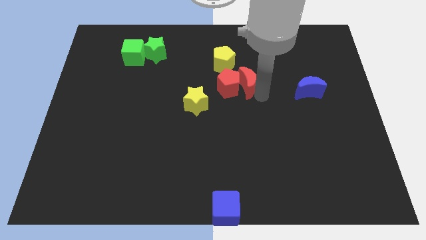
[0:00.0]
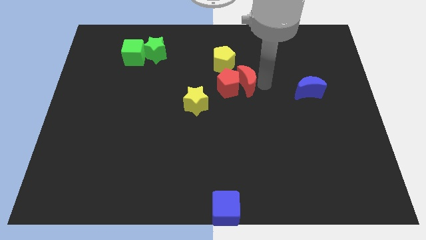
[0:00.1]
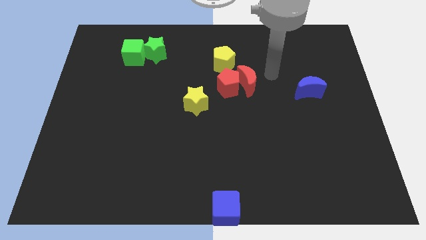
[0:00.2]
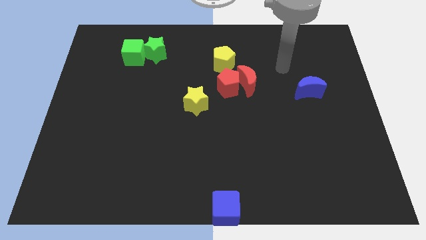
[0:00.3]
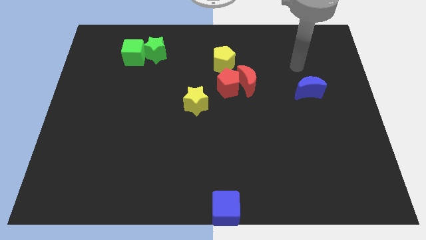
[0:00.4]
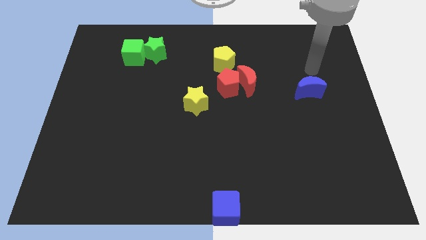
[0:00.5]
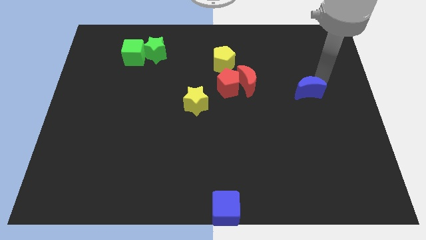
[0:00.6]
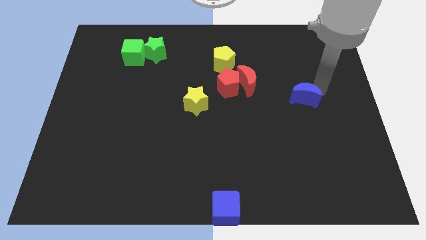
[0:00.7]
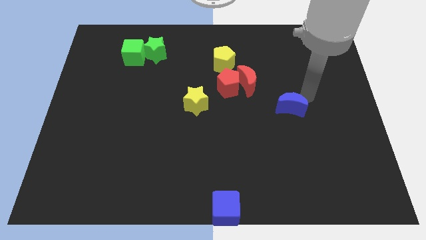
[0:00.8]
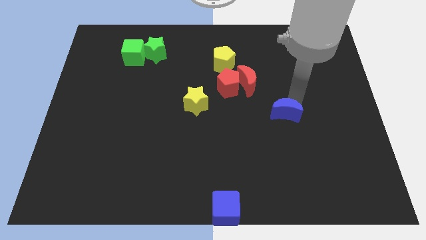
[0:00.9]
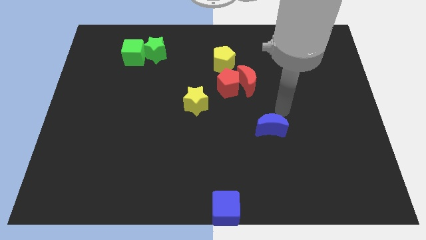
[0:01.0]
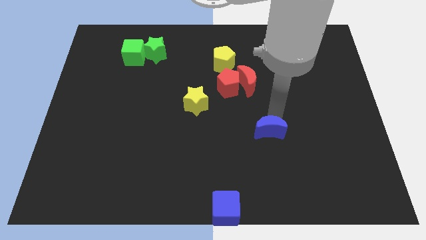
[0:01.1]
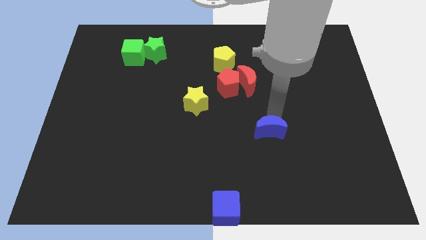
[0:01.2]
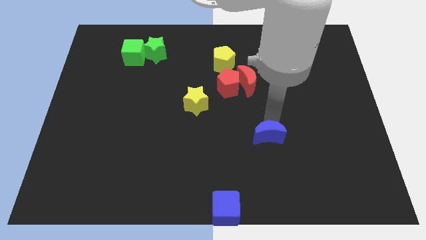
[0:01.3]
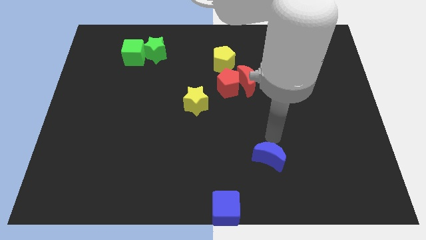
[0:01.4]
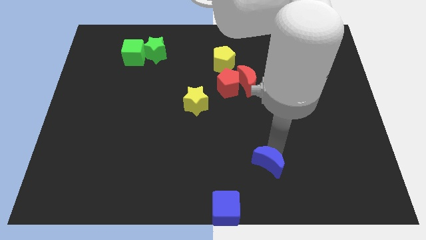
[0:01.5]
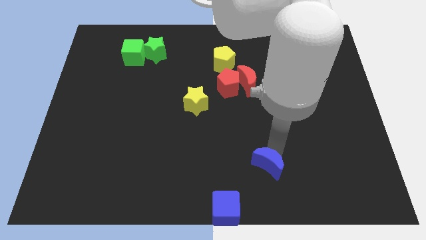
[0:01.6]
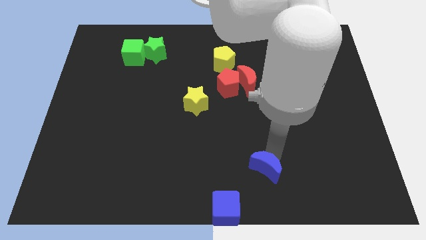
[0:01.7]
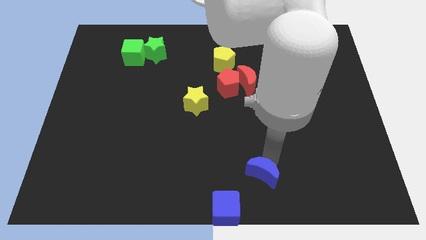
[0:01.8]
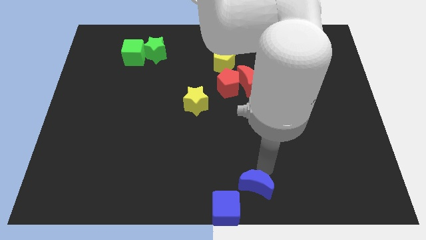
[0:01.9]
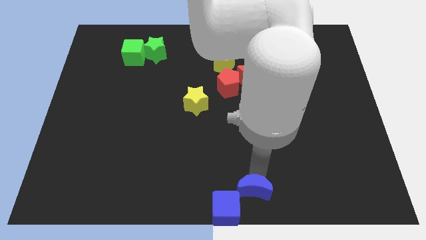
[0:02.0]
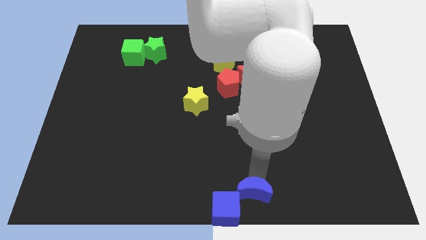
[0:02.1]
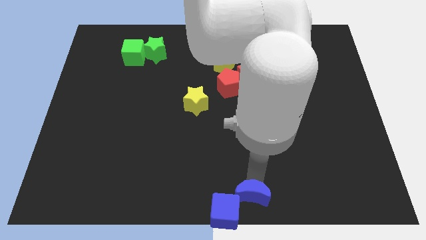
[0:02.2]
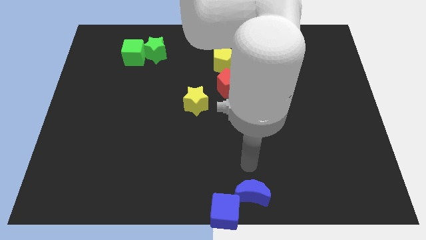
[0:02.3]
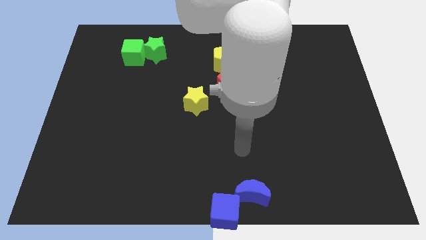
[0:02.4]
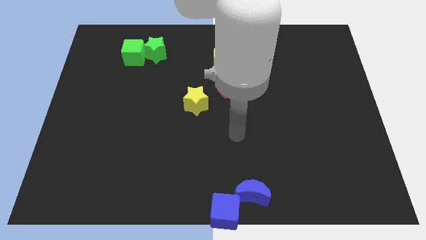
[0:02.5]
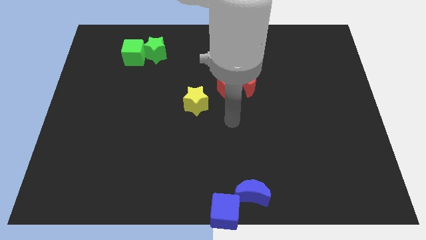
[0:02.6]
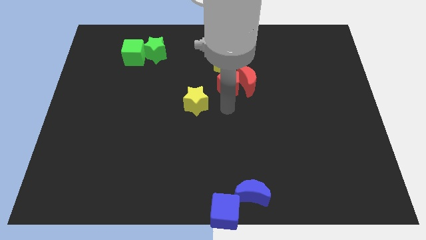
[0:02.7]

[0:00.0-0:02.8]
place the blue moon to the bottom center

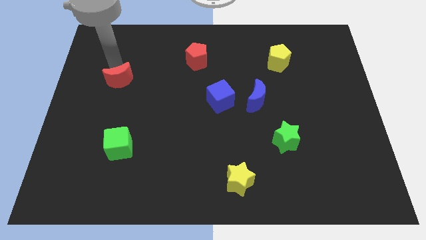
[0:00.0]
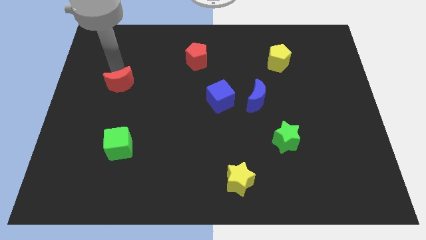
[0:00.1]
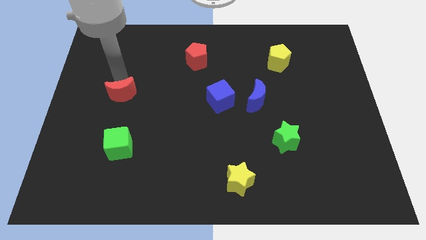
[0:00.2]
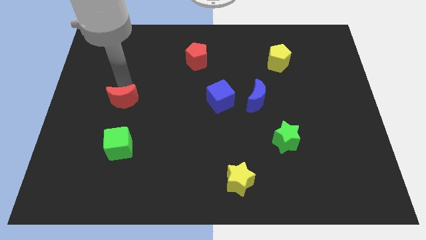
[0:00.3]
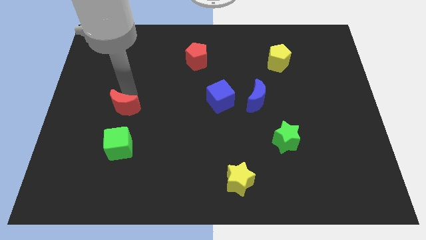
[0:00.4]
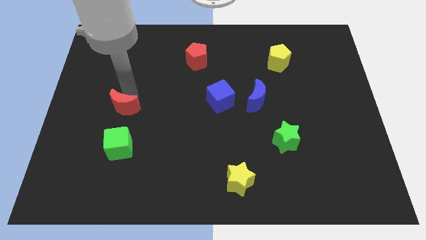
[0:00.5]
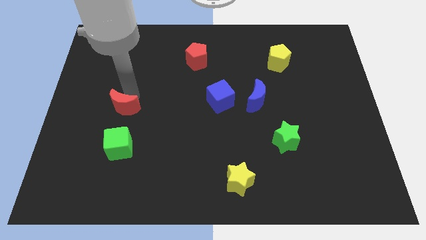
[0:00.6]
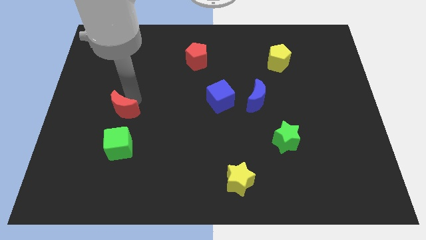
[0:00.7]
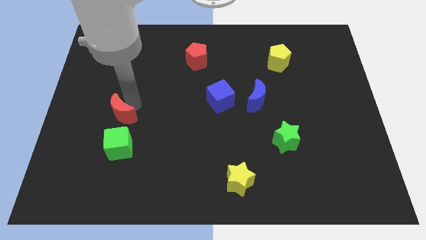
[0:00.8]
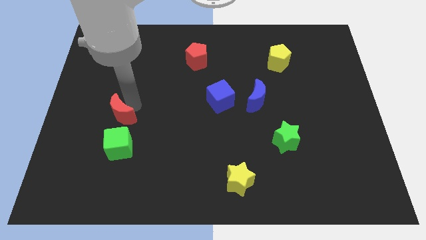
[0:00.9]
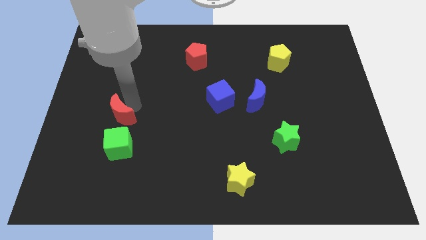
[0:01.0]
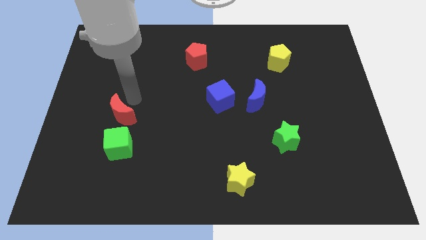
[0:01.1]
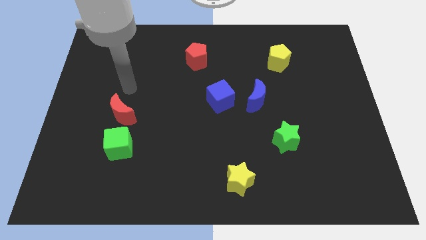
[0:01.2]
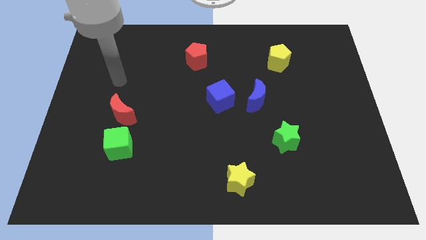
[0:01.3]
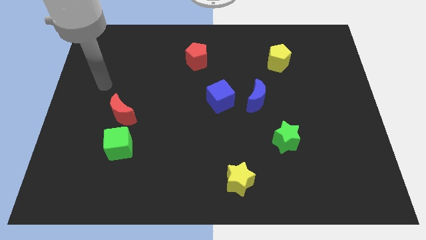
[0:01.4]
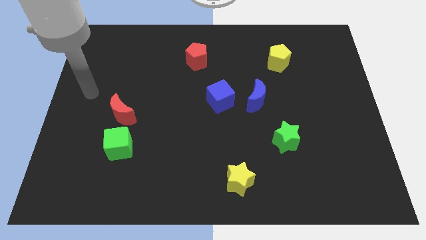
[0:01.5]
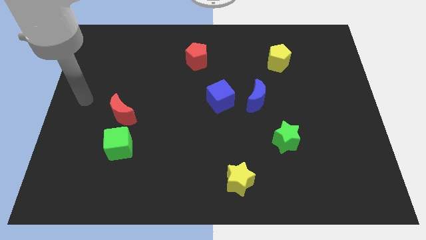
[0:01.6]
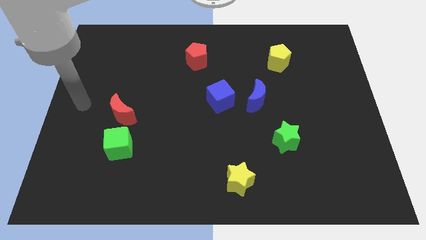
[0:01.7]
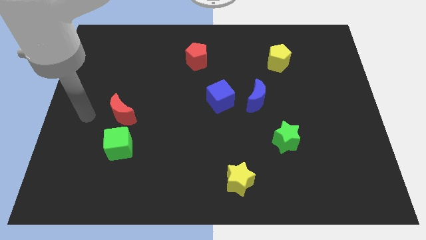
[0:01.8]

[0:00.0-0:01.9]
place the red crescent above the green cube

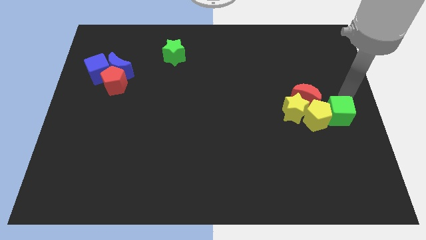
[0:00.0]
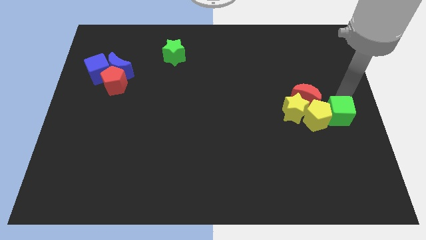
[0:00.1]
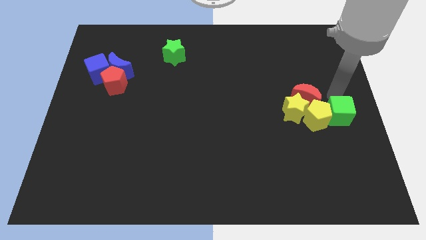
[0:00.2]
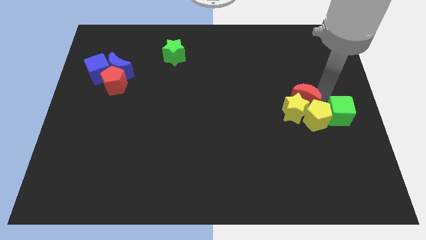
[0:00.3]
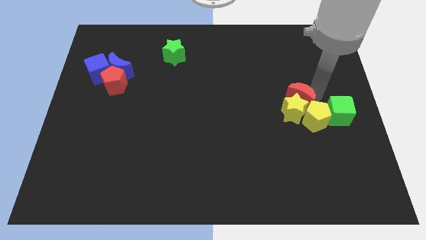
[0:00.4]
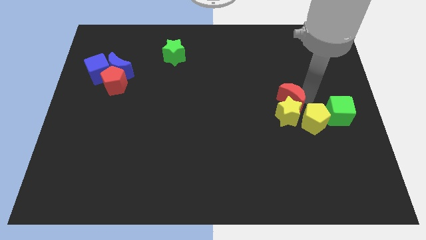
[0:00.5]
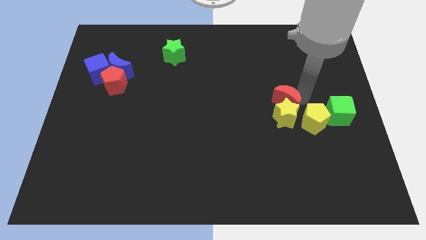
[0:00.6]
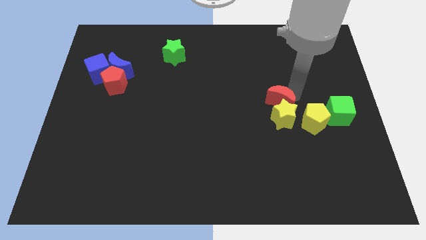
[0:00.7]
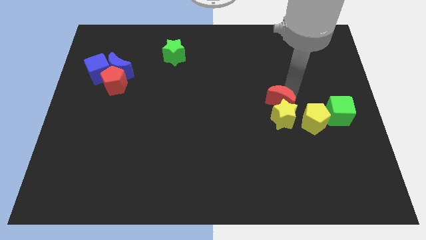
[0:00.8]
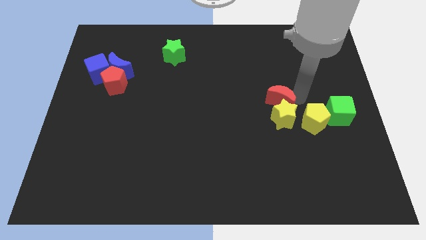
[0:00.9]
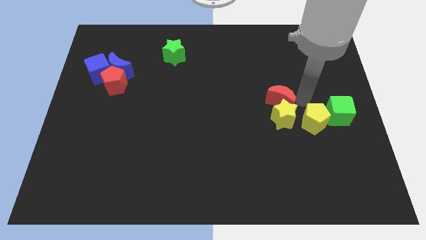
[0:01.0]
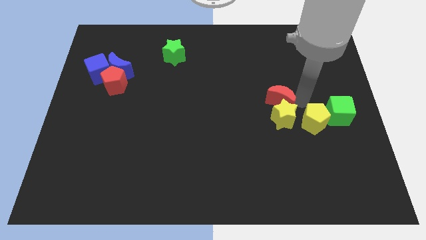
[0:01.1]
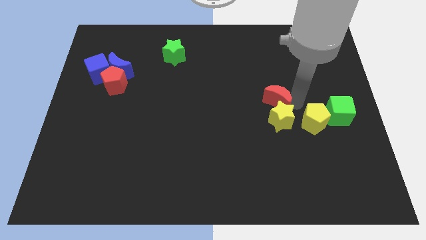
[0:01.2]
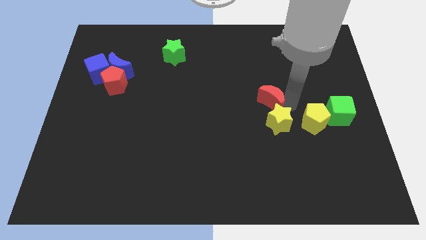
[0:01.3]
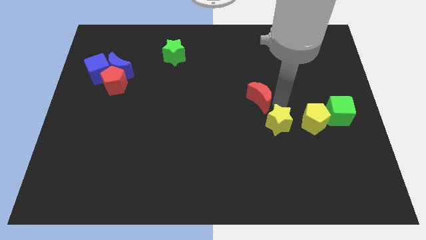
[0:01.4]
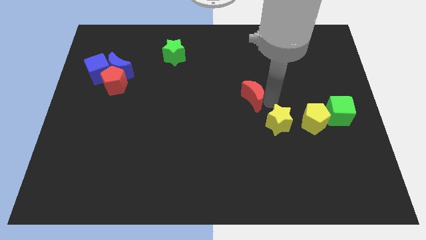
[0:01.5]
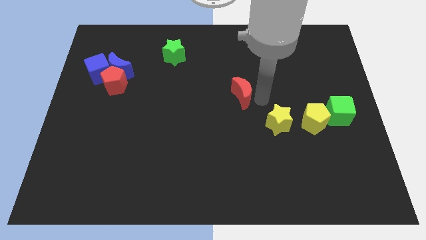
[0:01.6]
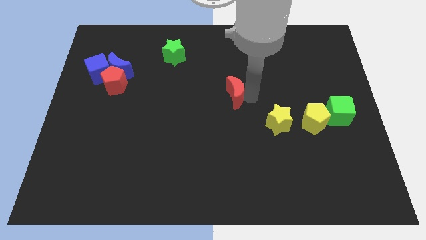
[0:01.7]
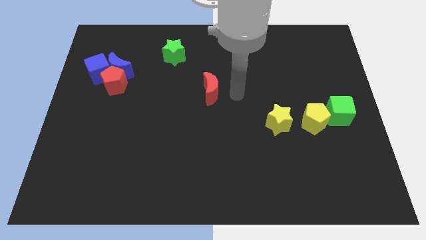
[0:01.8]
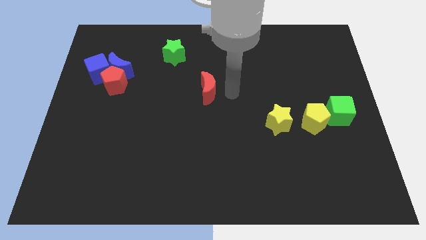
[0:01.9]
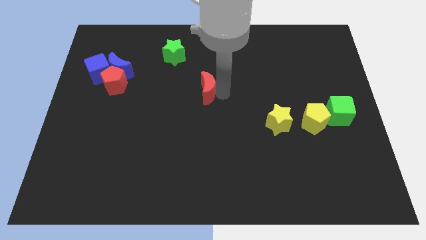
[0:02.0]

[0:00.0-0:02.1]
separate red moon from yellow star and yellow pentagon

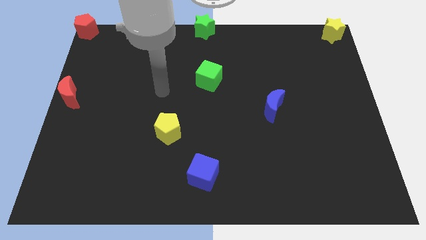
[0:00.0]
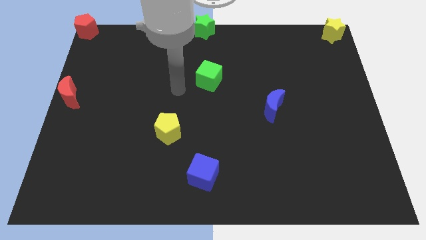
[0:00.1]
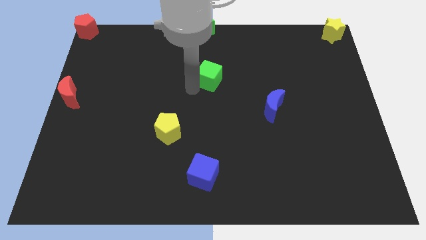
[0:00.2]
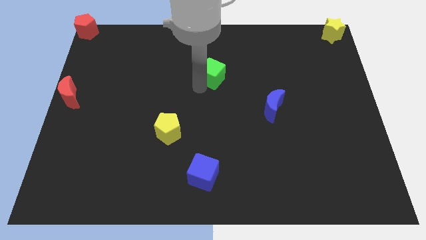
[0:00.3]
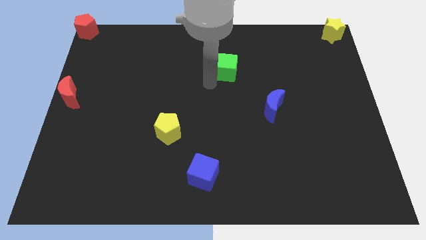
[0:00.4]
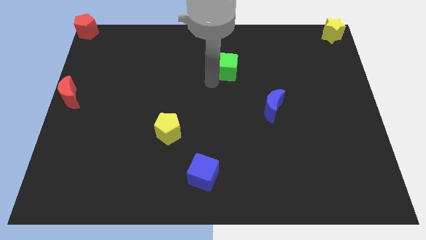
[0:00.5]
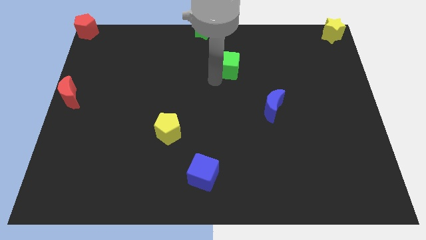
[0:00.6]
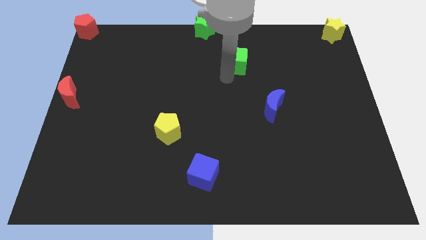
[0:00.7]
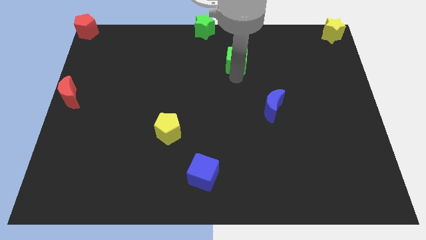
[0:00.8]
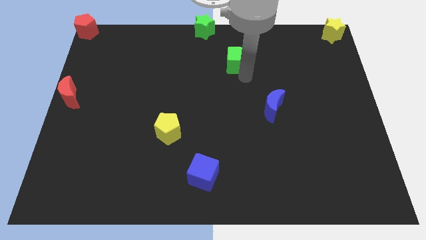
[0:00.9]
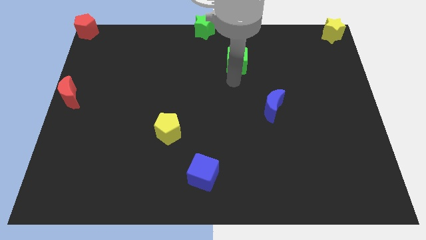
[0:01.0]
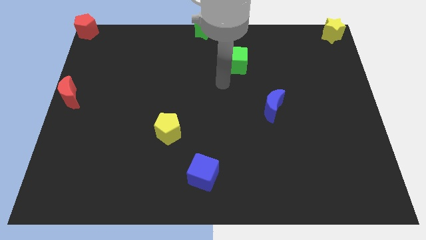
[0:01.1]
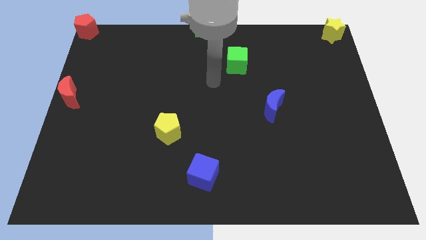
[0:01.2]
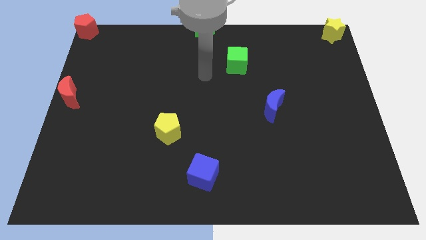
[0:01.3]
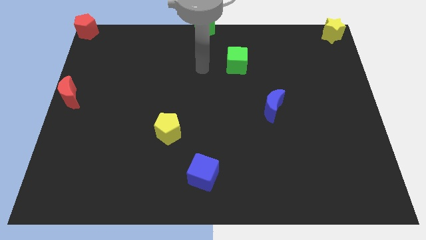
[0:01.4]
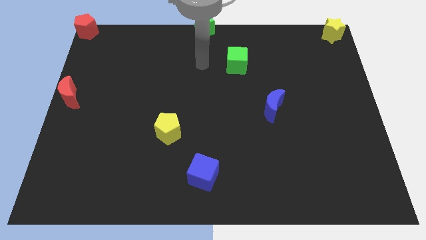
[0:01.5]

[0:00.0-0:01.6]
move the green cube diagonally in between the green star and blue crescent

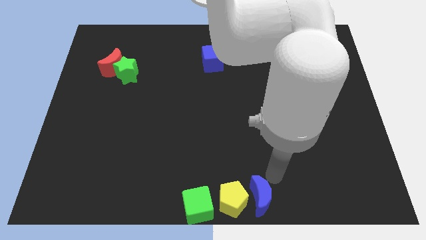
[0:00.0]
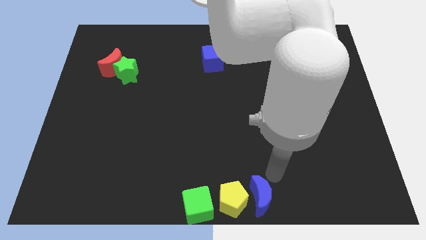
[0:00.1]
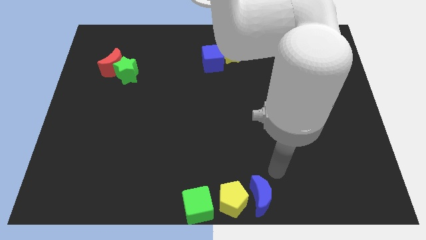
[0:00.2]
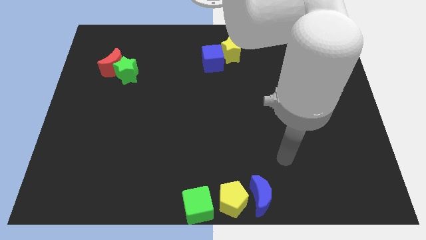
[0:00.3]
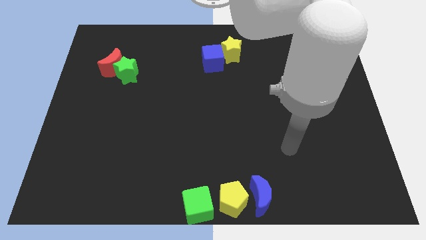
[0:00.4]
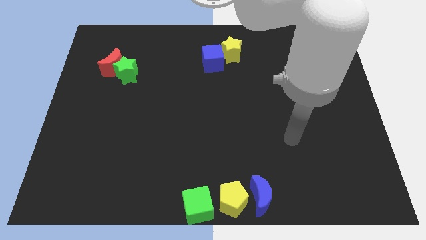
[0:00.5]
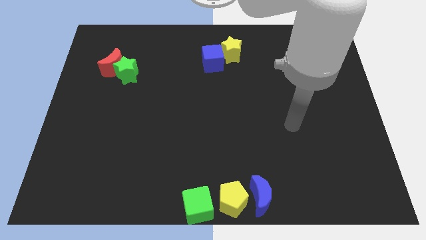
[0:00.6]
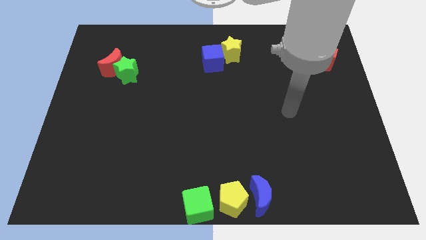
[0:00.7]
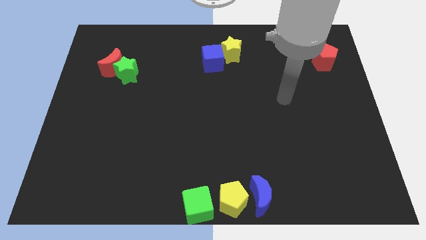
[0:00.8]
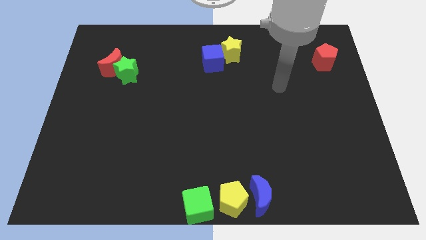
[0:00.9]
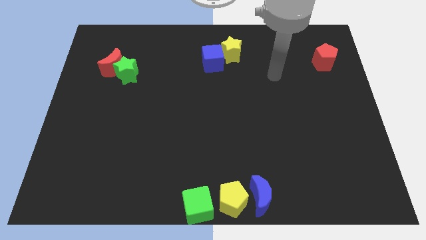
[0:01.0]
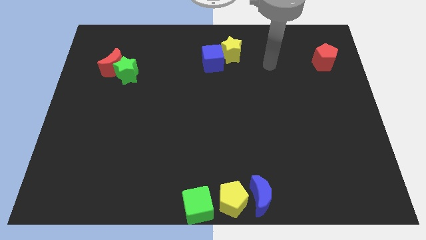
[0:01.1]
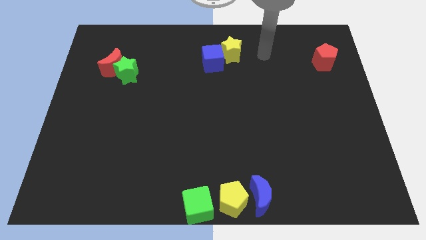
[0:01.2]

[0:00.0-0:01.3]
point your arm at the right of the yellow star
